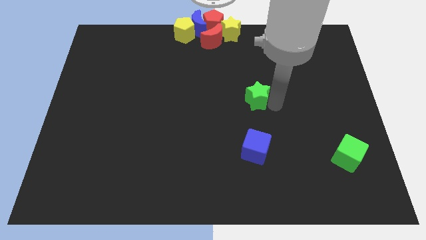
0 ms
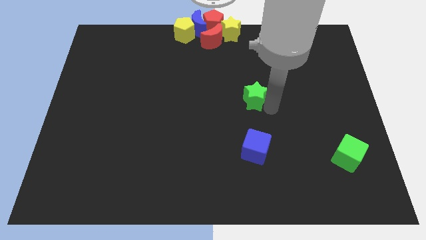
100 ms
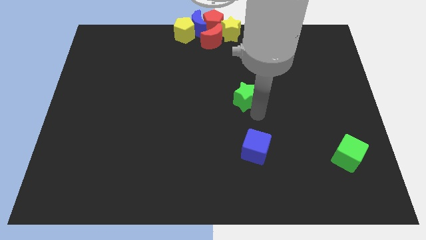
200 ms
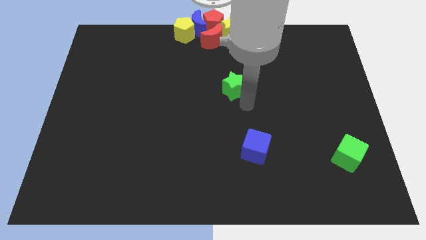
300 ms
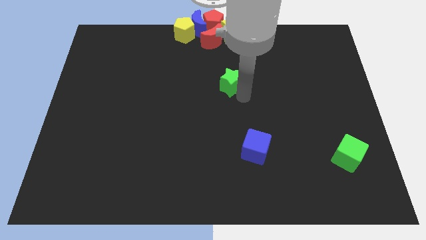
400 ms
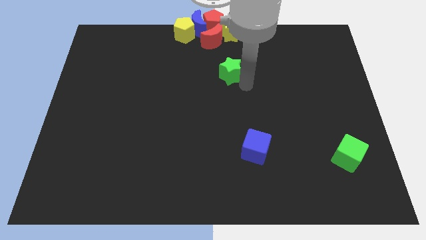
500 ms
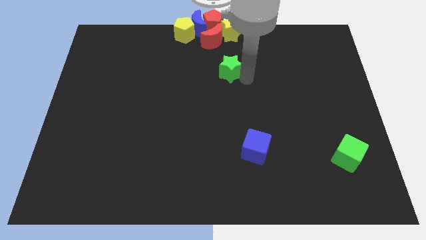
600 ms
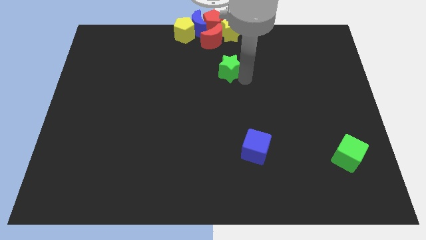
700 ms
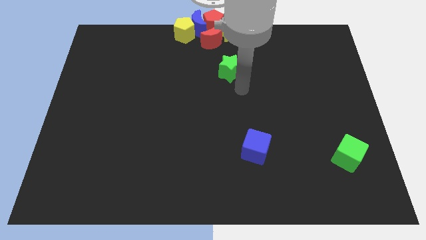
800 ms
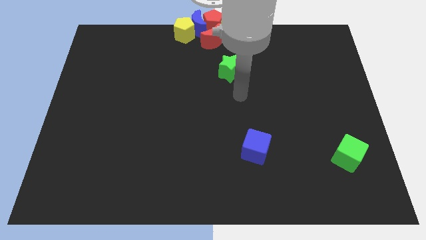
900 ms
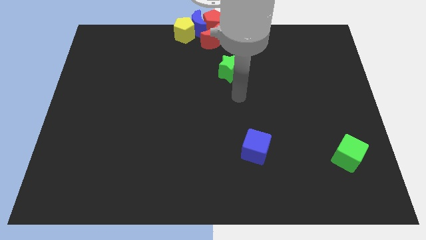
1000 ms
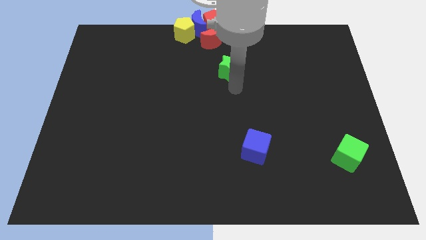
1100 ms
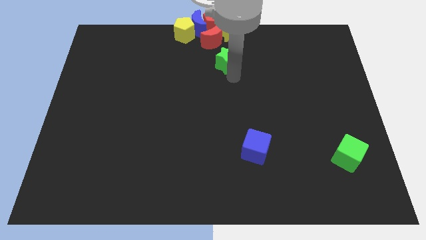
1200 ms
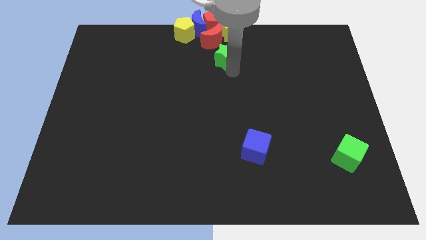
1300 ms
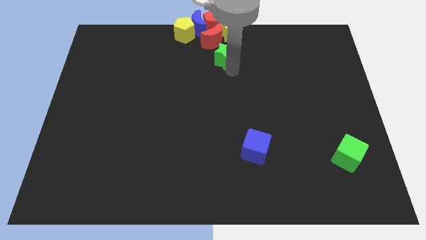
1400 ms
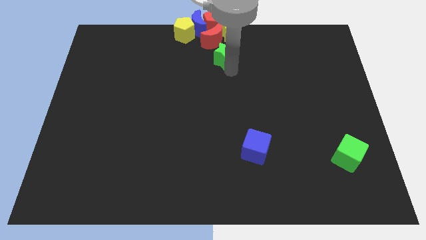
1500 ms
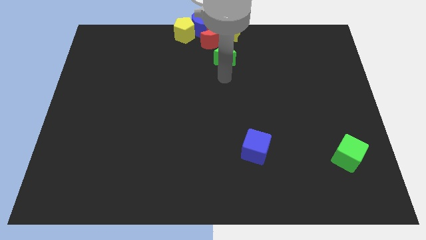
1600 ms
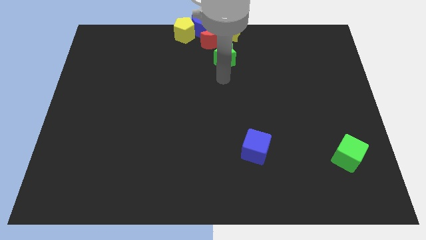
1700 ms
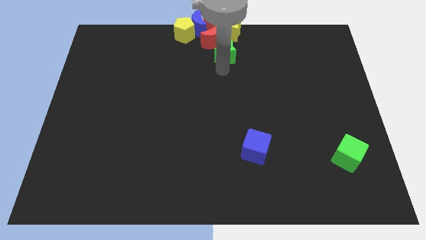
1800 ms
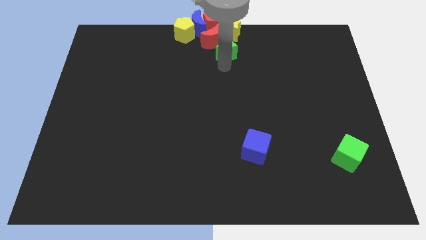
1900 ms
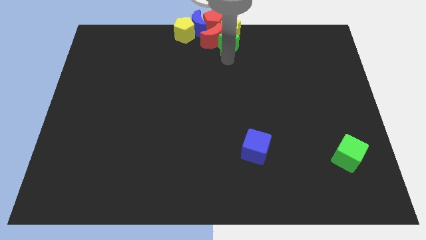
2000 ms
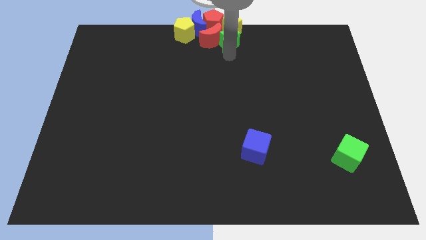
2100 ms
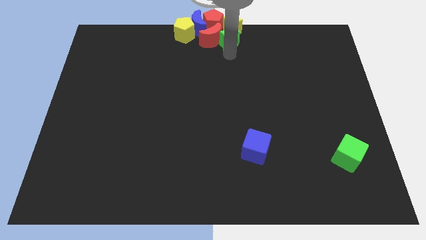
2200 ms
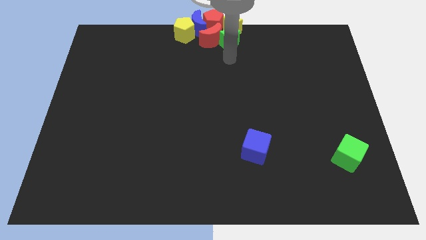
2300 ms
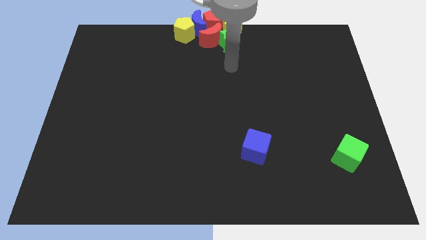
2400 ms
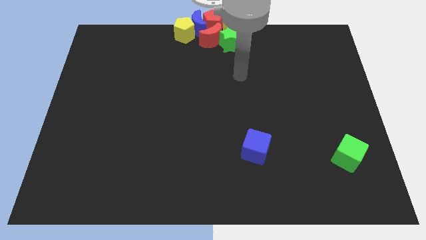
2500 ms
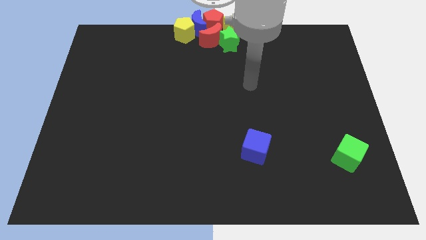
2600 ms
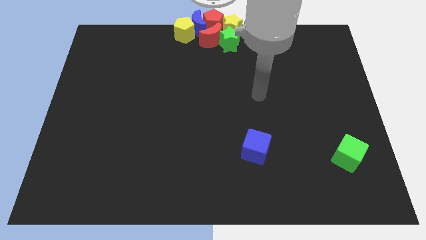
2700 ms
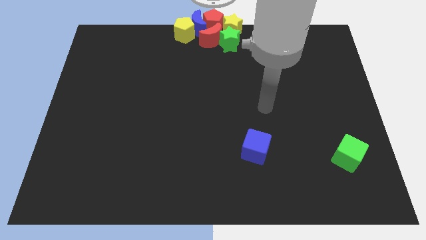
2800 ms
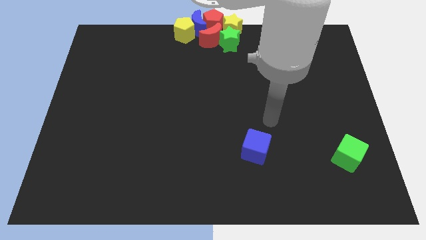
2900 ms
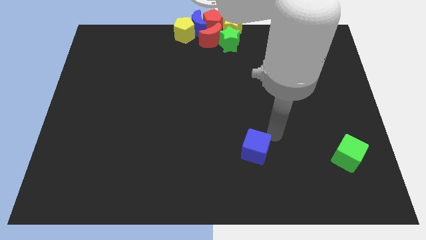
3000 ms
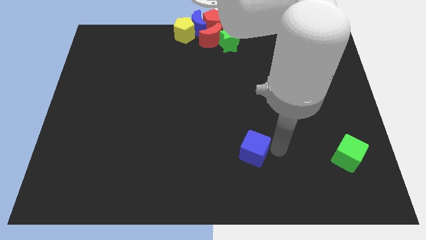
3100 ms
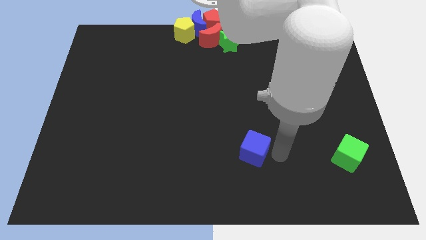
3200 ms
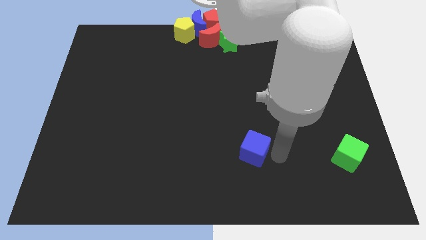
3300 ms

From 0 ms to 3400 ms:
move the green star into the group of blocks

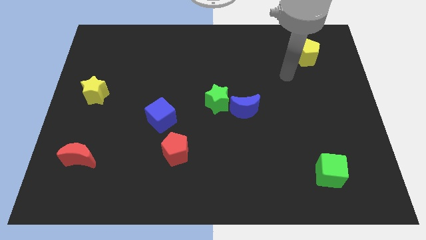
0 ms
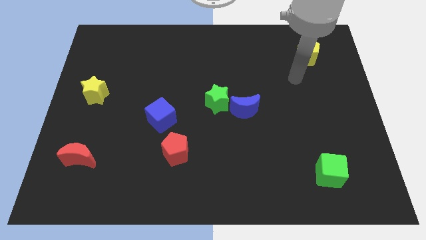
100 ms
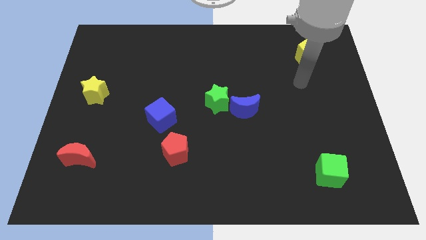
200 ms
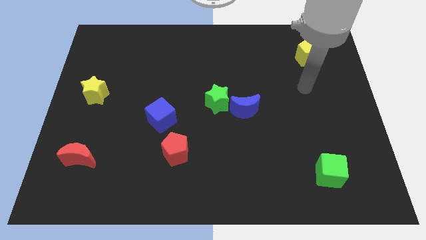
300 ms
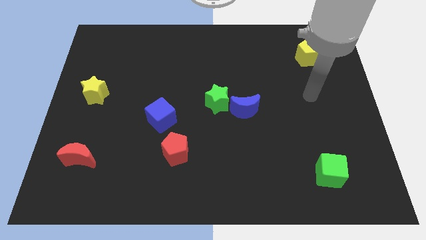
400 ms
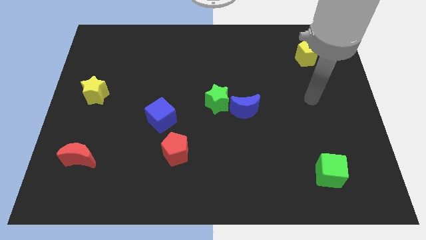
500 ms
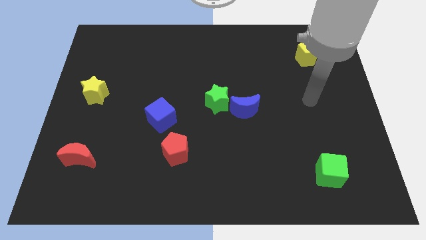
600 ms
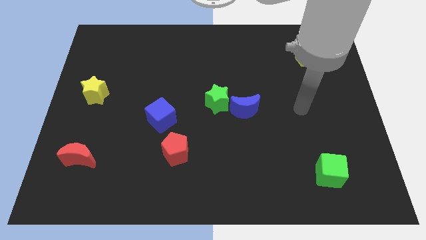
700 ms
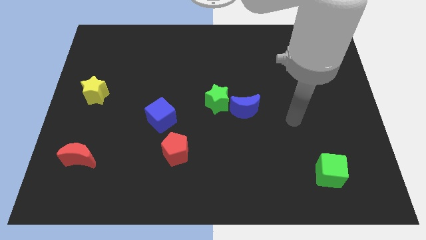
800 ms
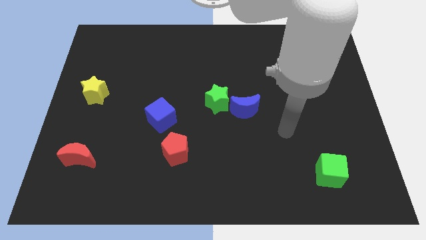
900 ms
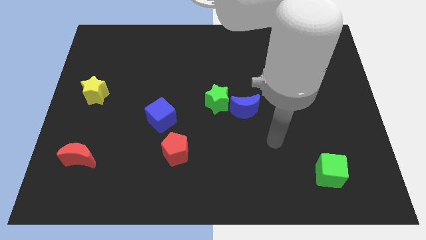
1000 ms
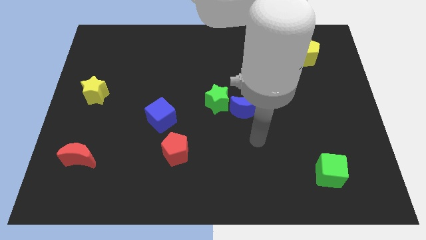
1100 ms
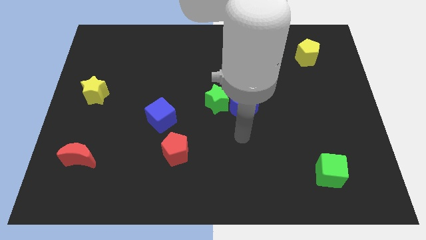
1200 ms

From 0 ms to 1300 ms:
point your arm at the bottom of the blue crescent

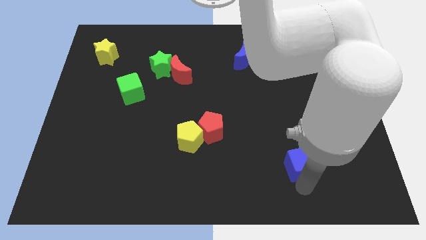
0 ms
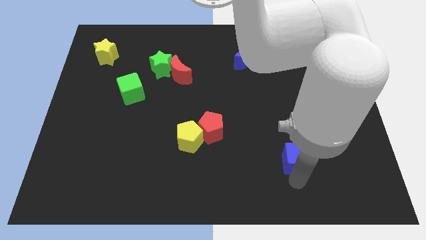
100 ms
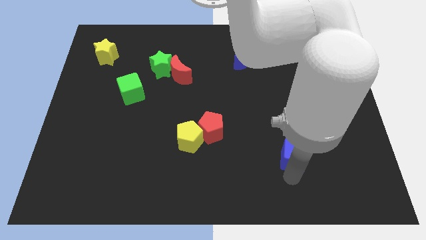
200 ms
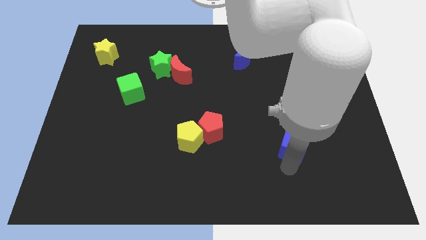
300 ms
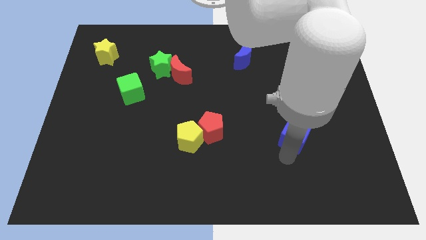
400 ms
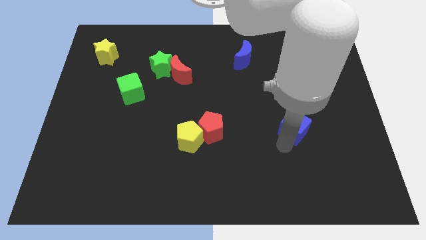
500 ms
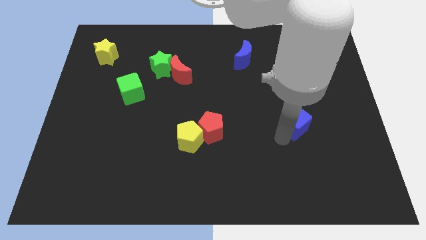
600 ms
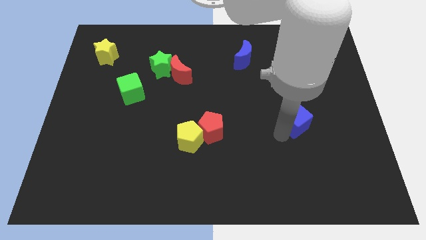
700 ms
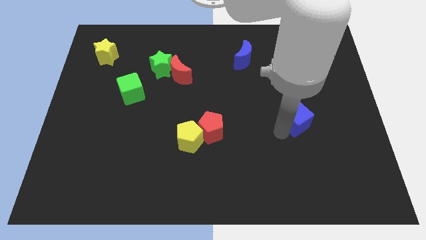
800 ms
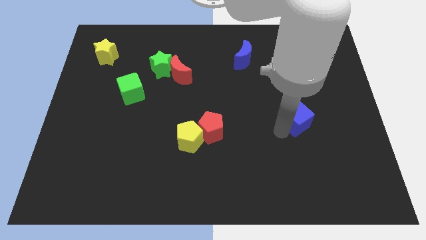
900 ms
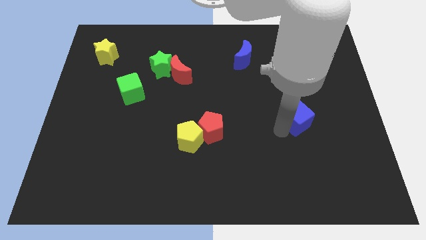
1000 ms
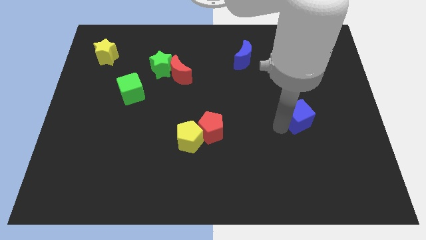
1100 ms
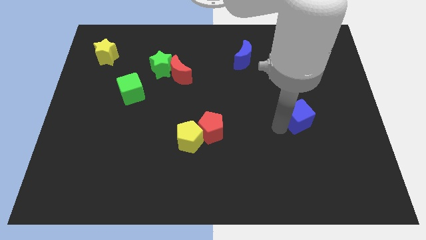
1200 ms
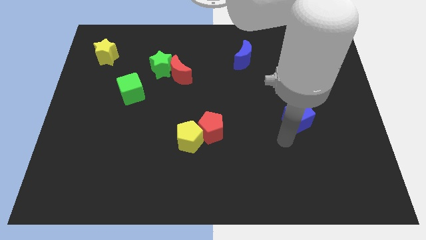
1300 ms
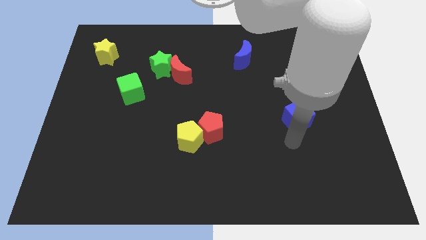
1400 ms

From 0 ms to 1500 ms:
move the blue cube slightly to top

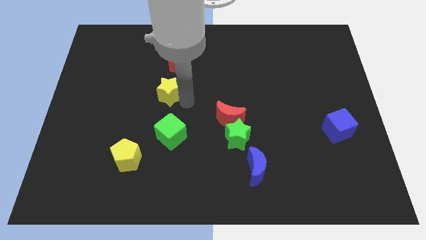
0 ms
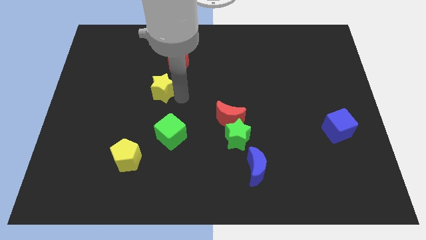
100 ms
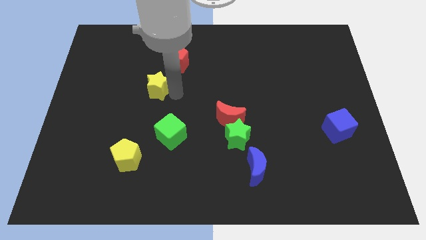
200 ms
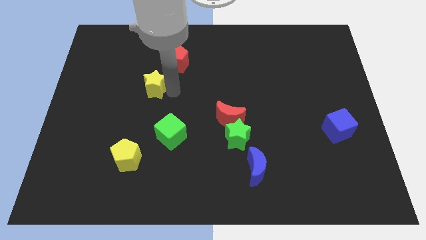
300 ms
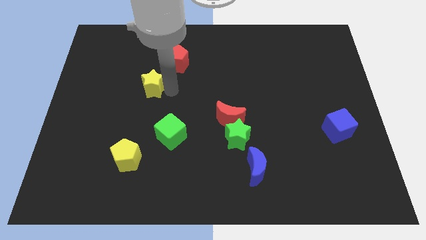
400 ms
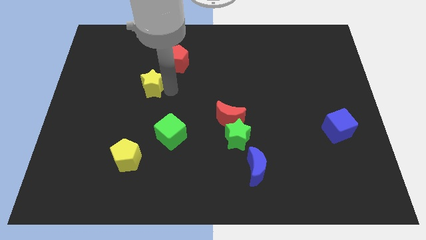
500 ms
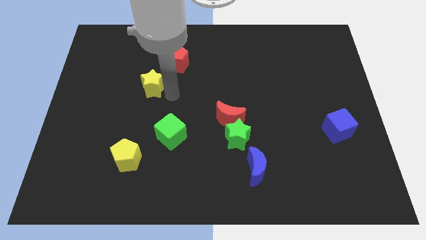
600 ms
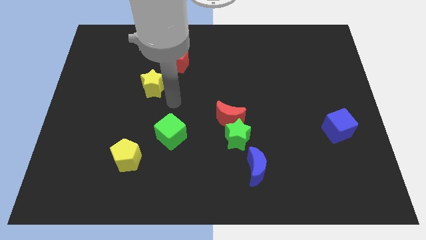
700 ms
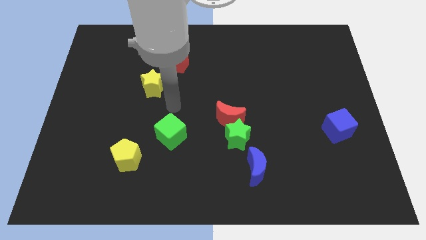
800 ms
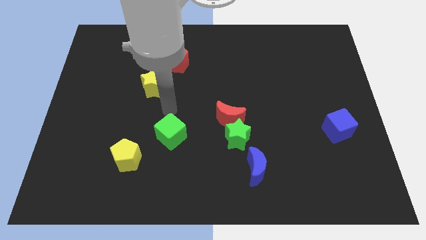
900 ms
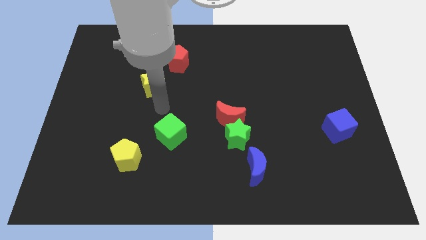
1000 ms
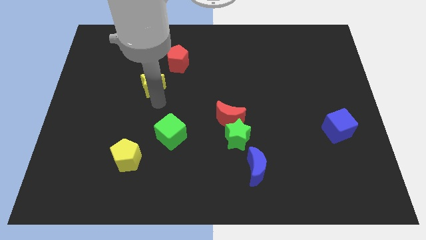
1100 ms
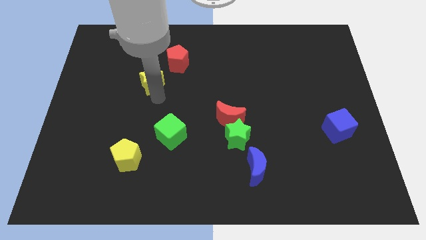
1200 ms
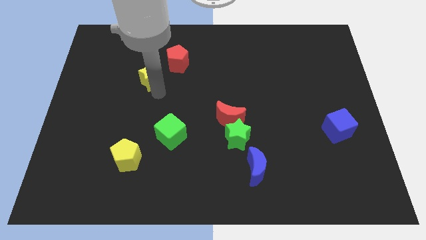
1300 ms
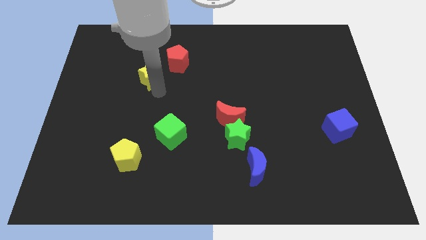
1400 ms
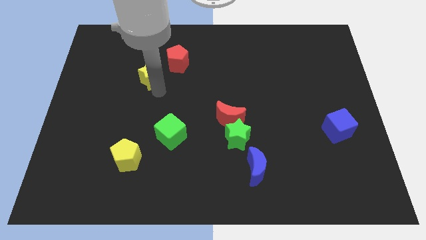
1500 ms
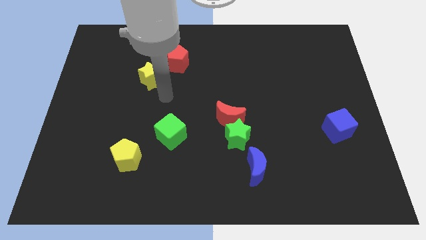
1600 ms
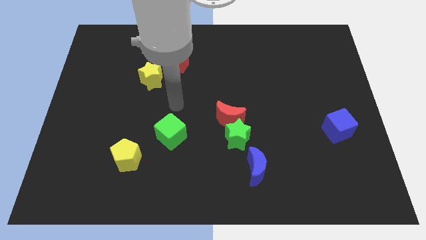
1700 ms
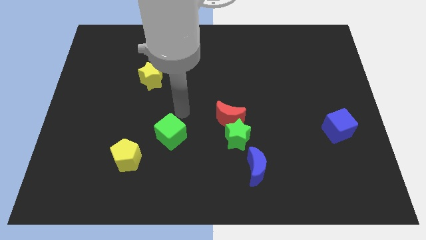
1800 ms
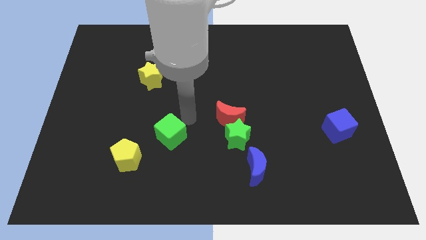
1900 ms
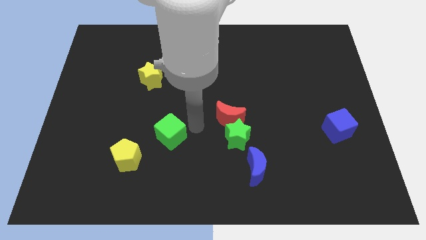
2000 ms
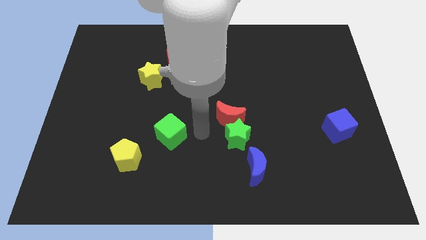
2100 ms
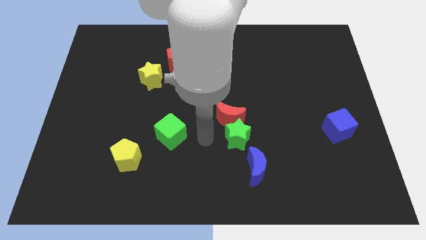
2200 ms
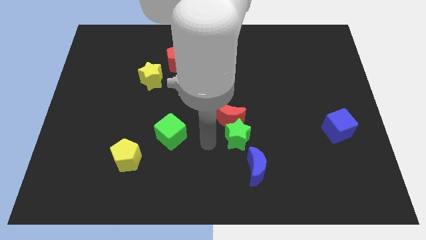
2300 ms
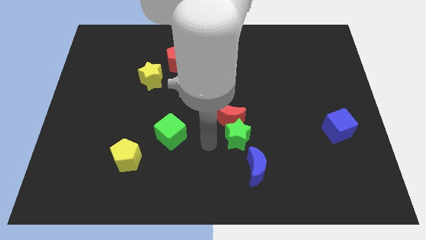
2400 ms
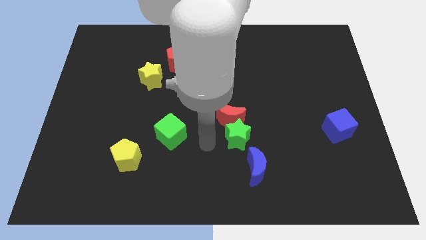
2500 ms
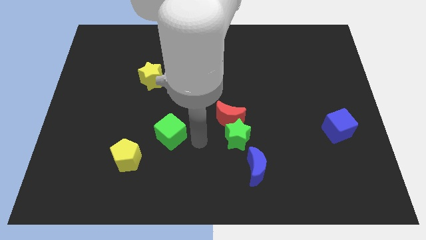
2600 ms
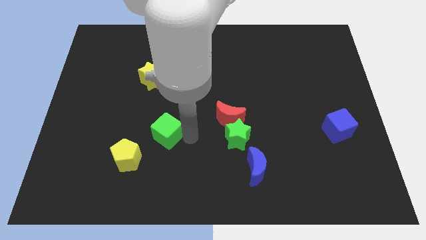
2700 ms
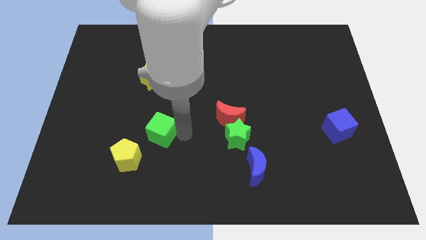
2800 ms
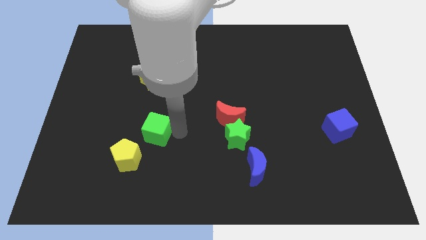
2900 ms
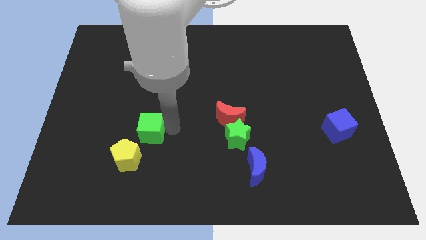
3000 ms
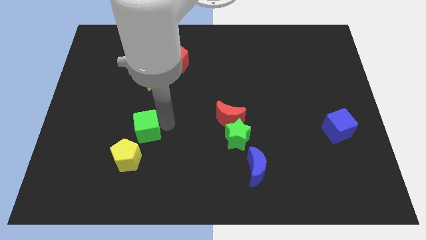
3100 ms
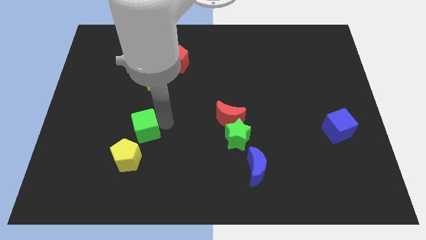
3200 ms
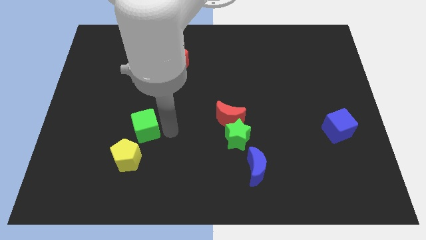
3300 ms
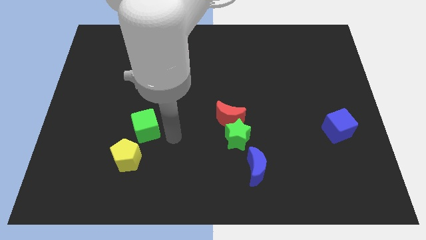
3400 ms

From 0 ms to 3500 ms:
push green cube below yellow star
